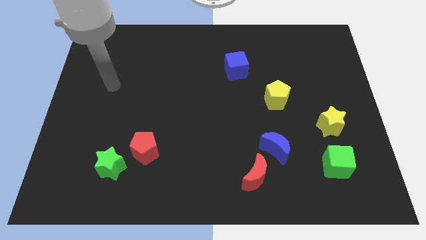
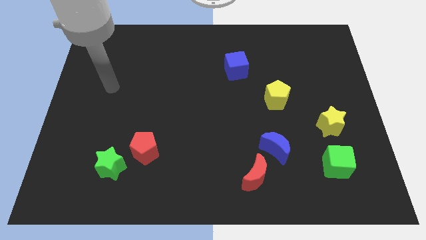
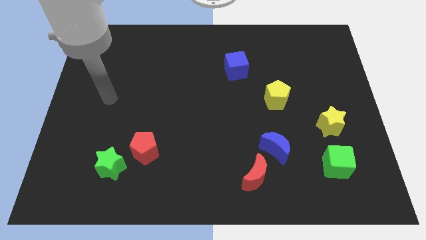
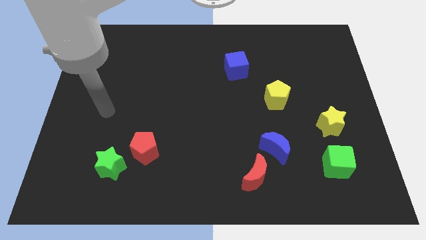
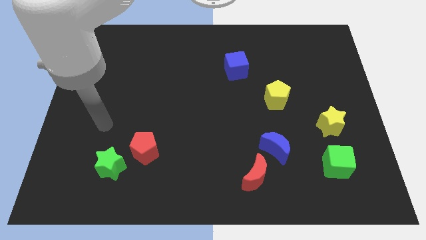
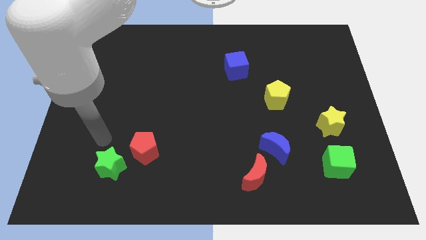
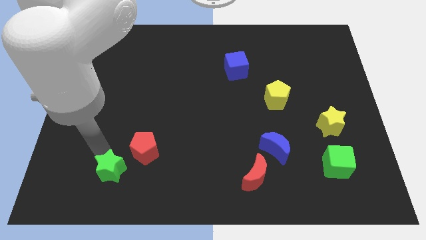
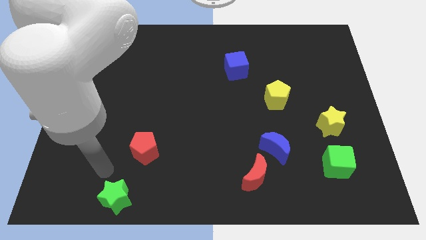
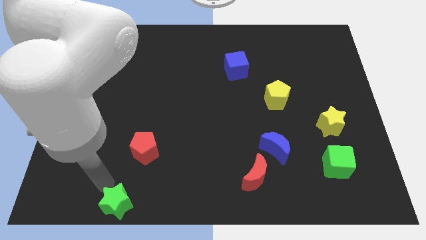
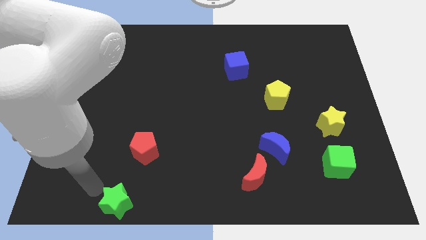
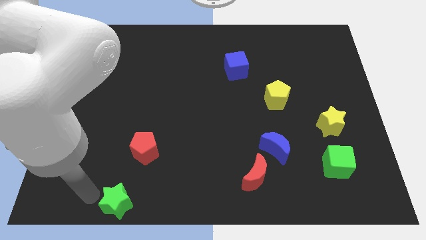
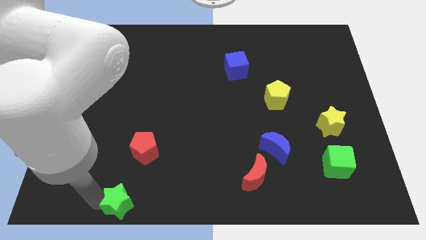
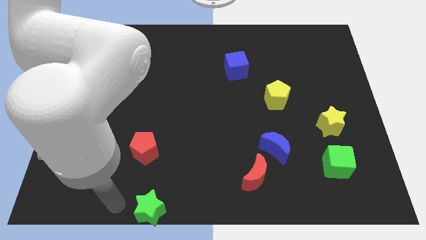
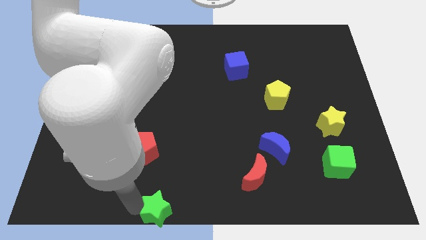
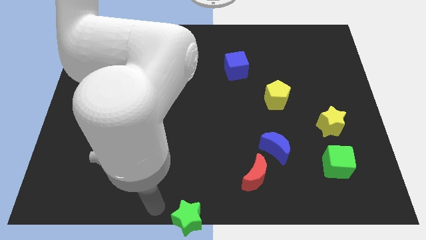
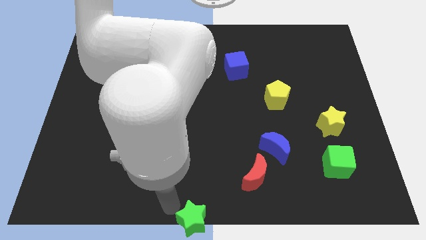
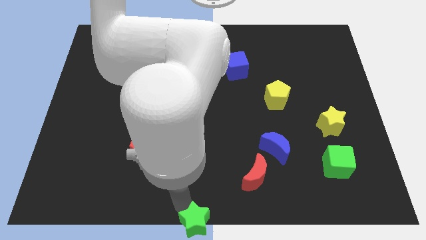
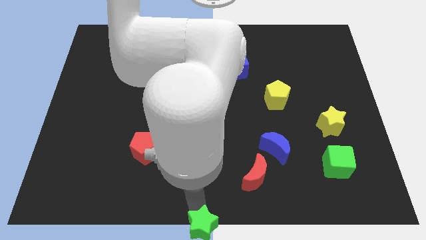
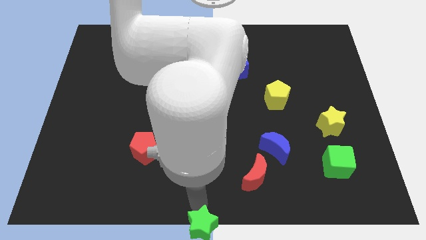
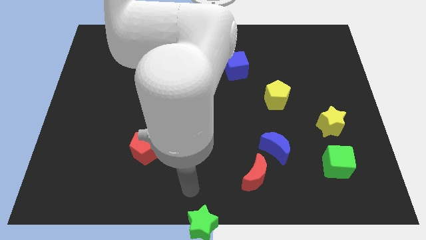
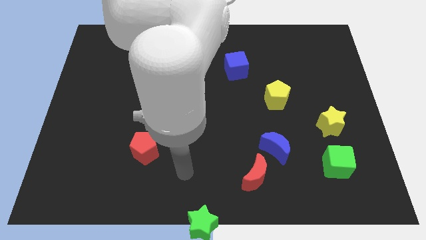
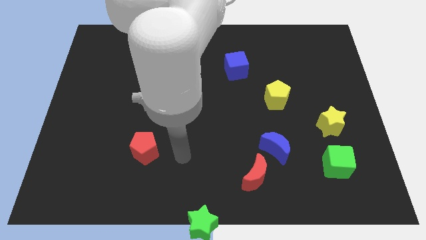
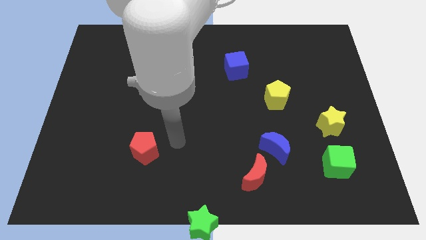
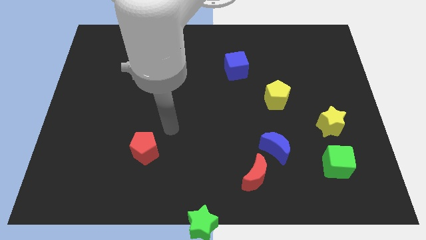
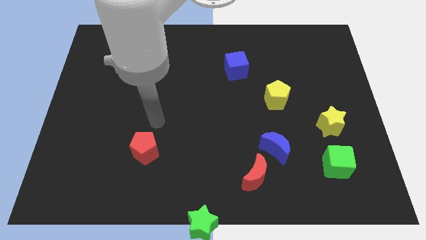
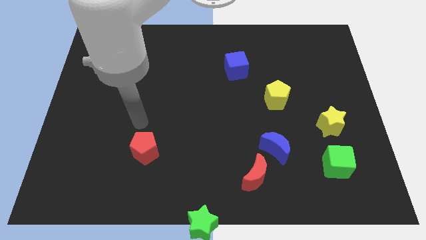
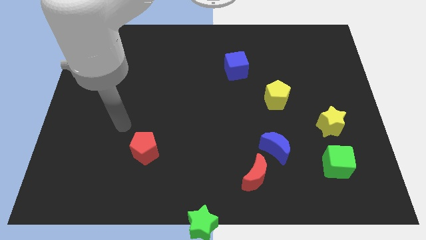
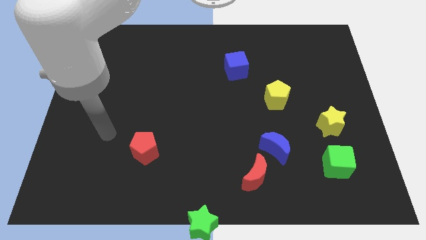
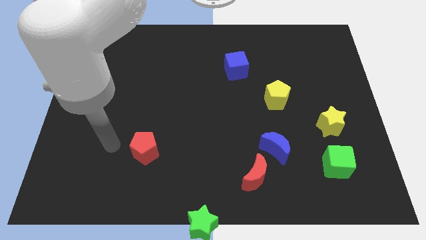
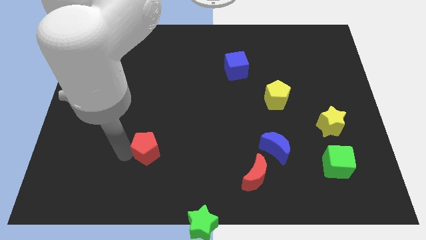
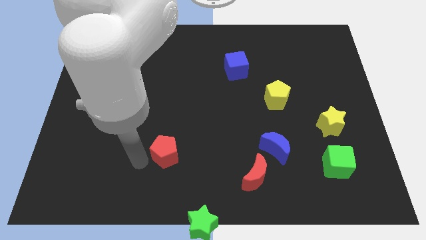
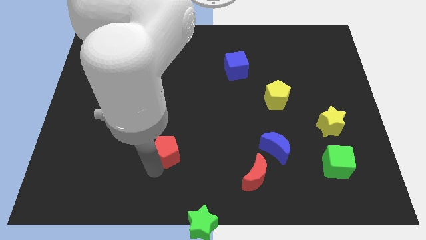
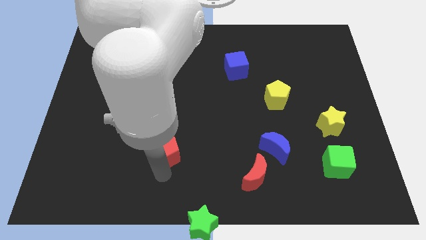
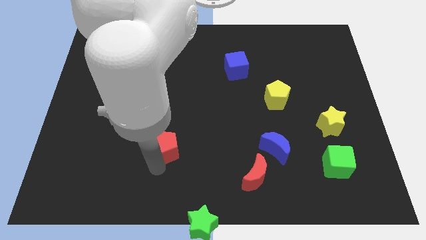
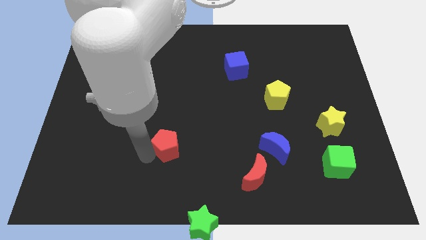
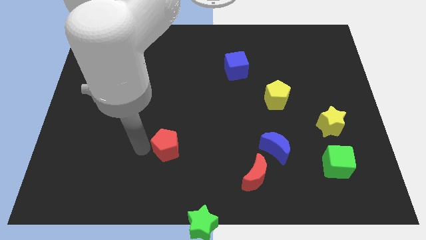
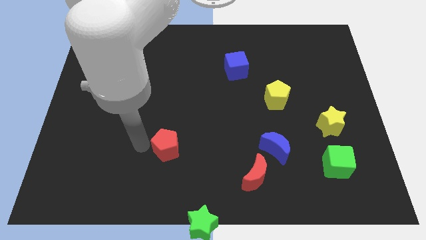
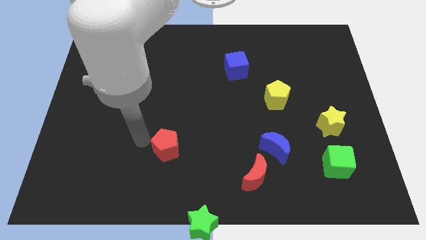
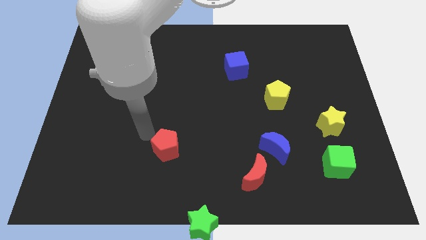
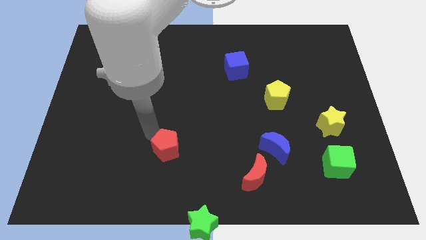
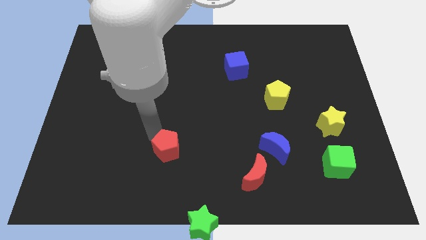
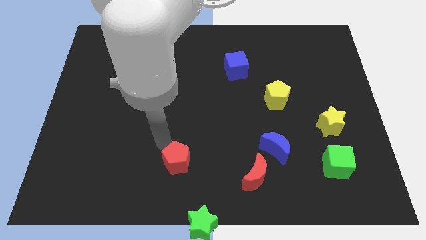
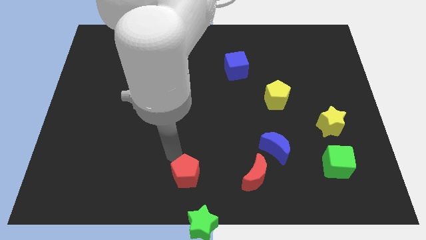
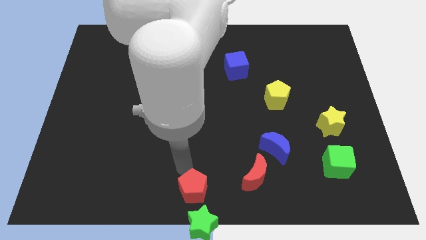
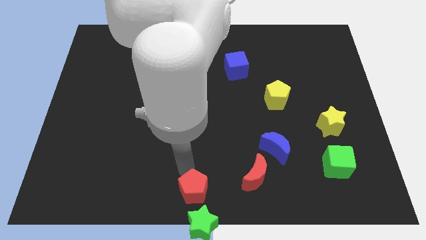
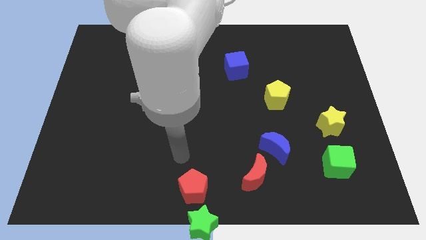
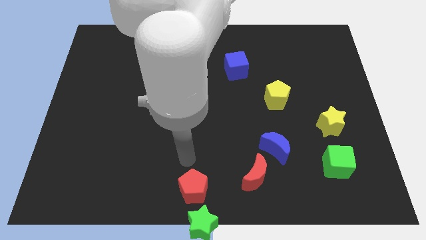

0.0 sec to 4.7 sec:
place green star and red pentagon at bottom center of the board

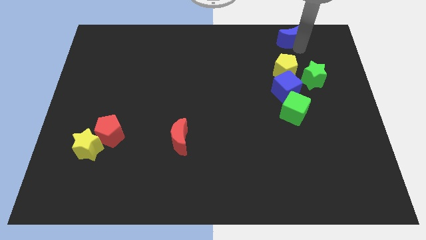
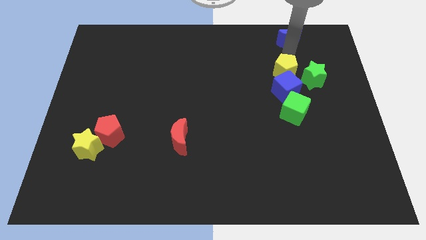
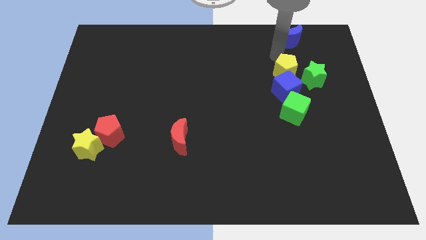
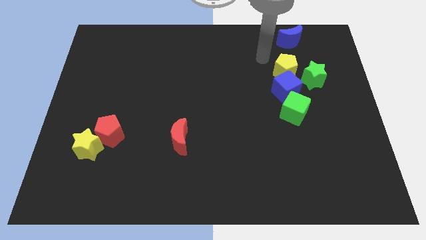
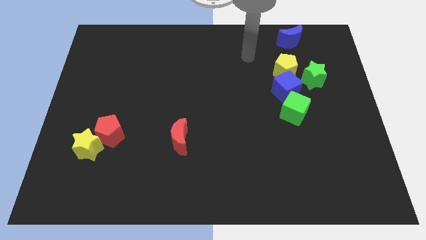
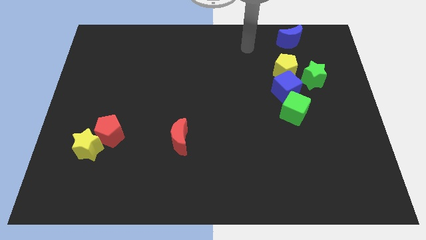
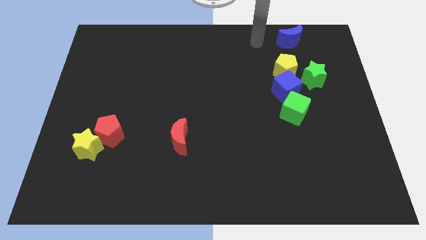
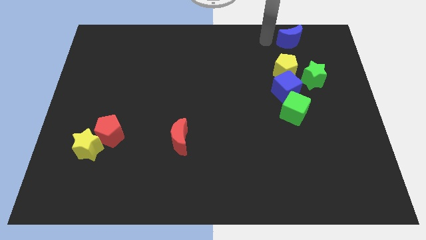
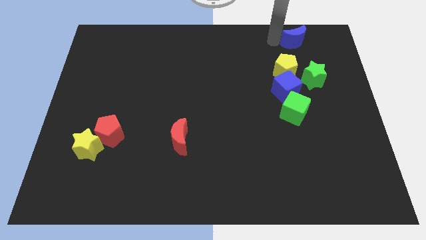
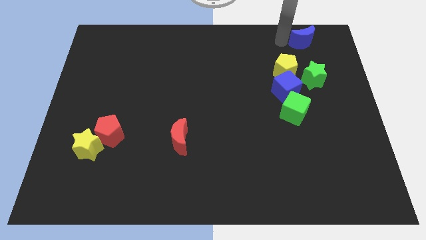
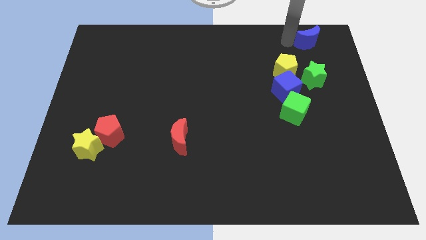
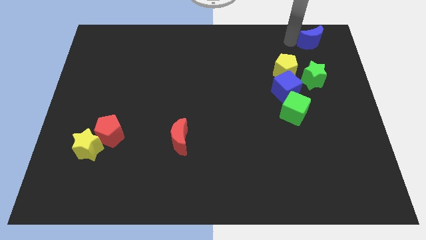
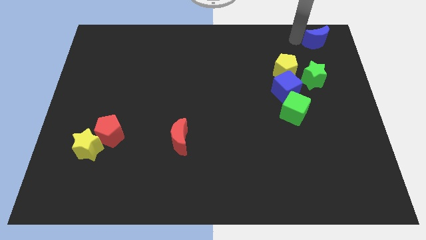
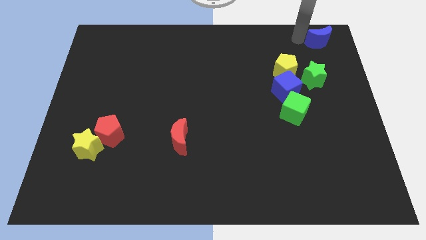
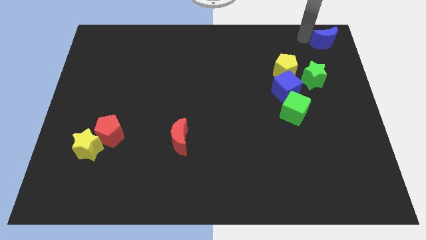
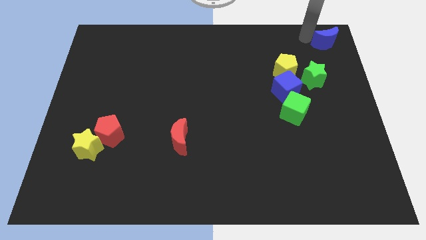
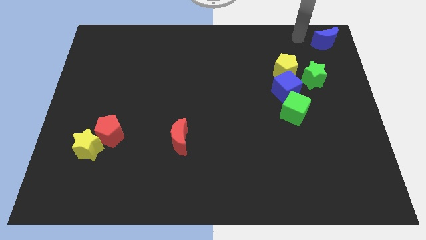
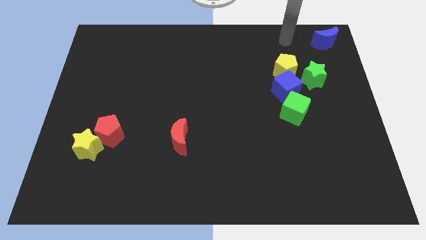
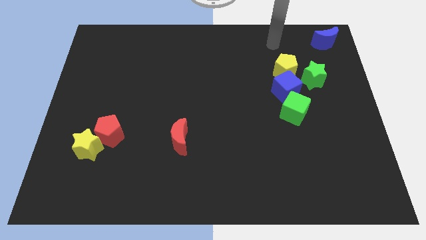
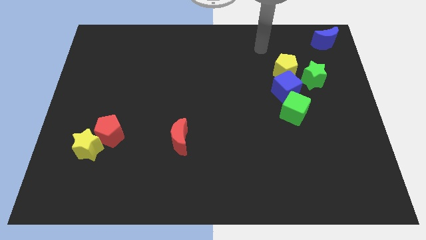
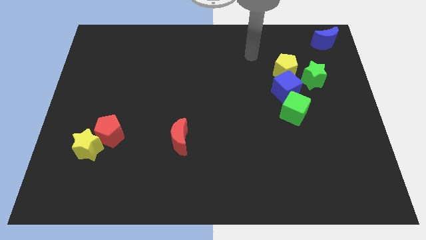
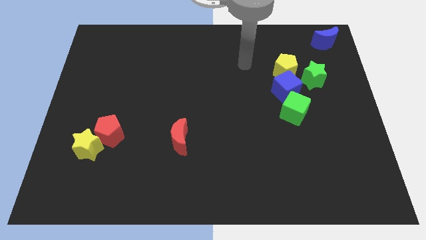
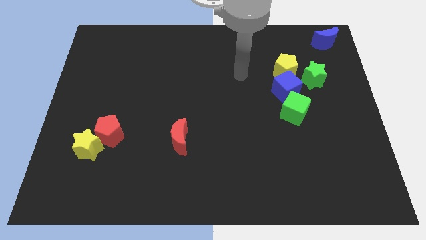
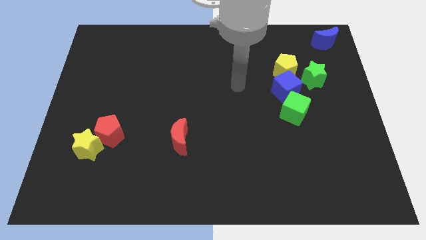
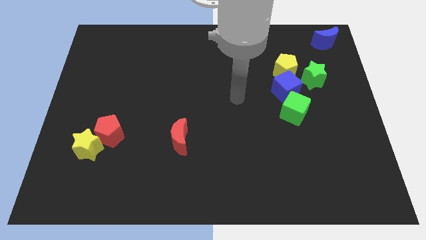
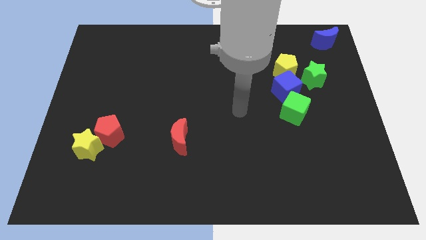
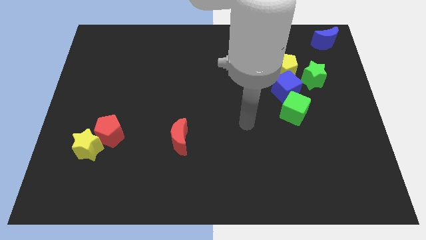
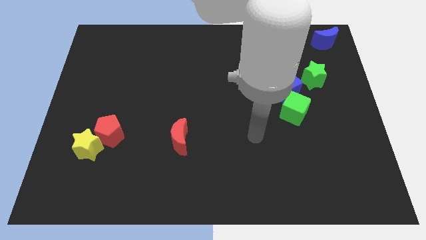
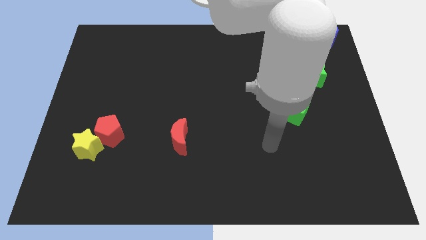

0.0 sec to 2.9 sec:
push the blue crescent to the top right

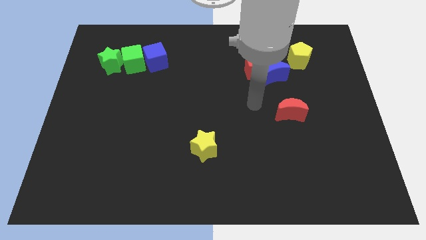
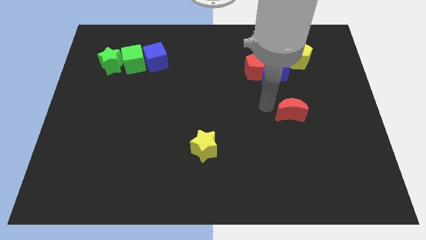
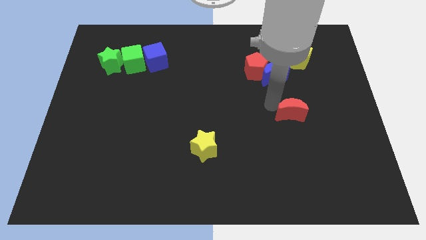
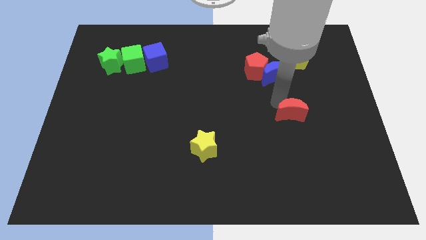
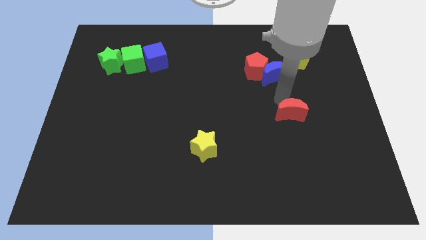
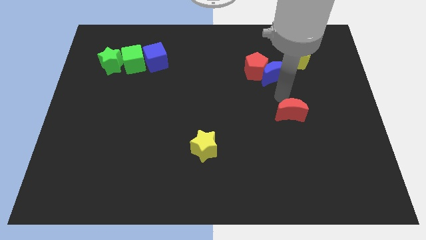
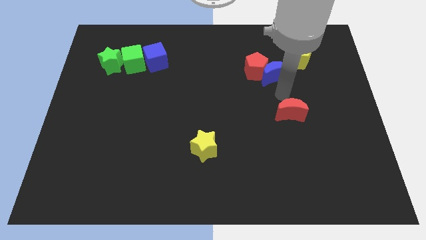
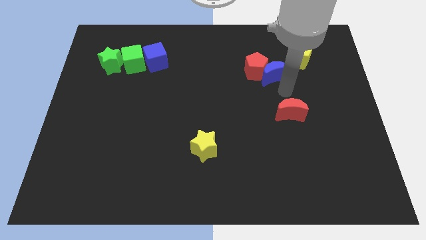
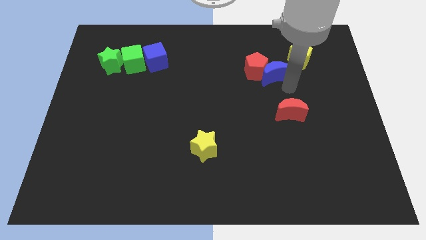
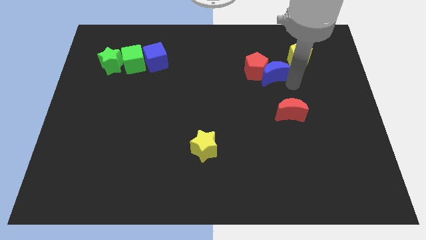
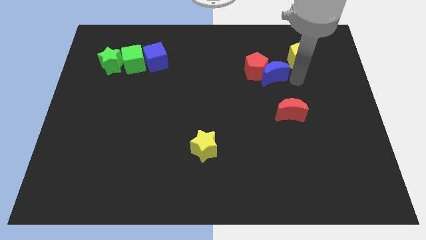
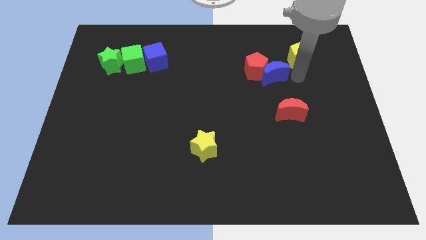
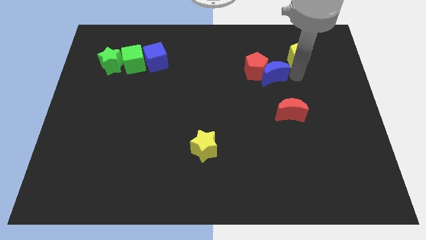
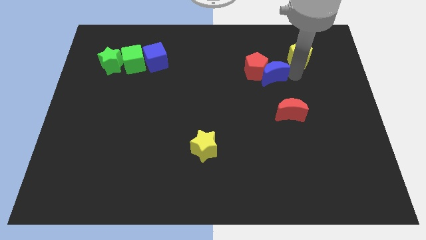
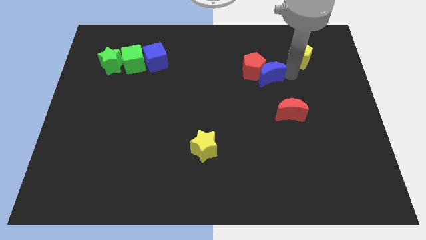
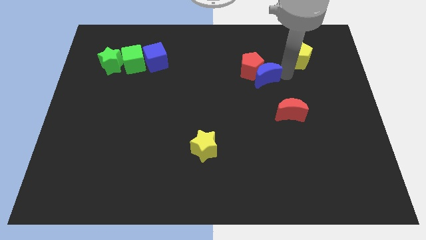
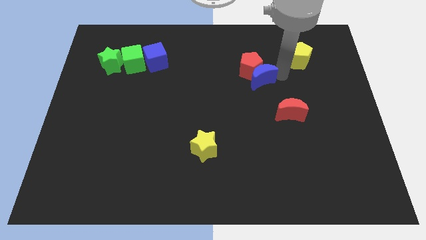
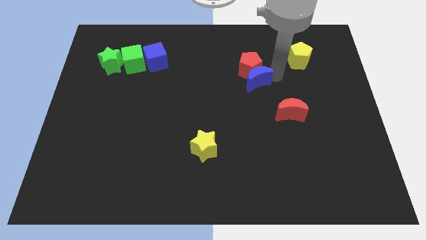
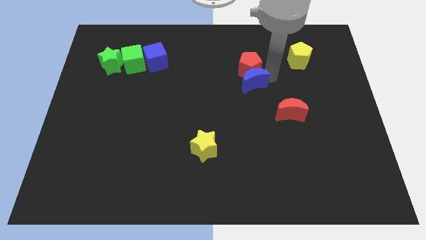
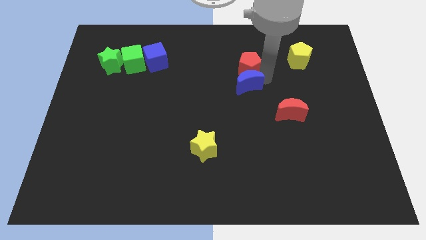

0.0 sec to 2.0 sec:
push the blue moon slightly to the bottom of red pentagon
